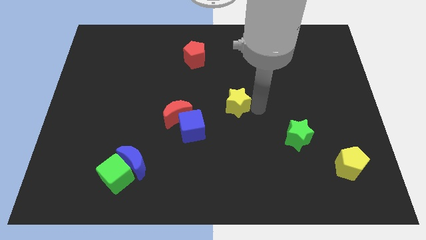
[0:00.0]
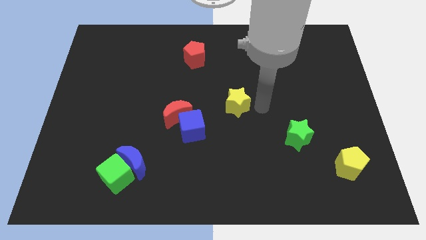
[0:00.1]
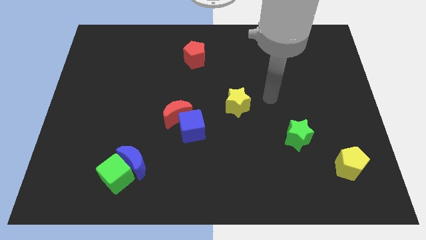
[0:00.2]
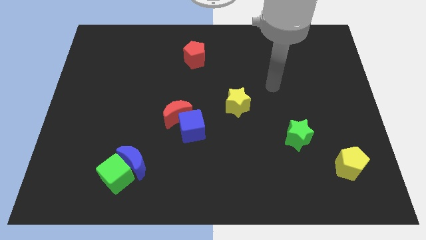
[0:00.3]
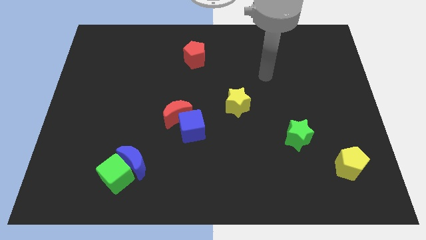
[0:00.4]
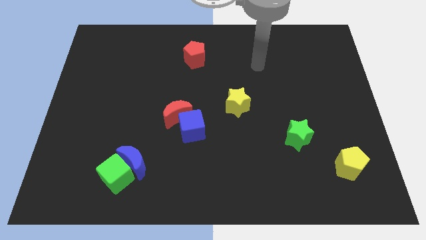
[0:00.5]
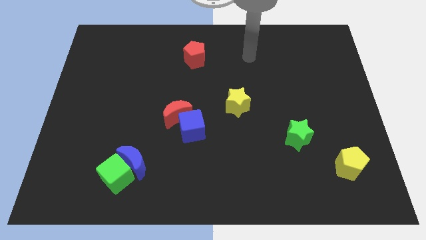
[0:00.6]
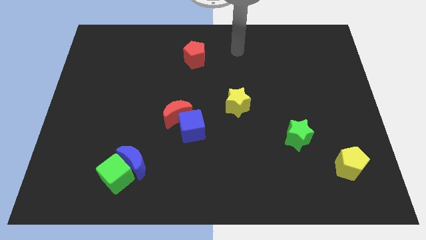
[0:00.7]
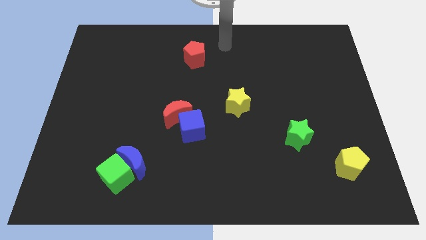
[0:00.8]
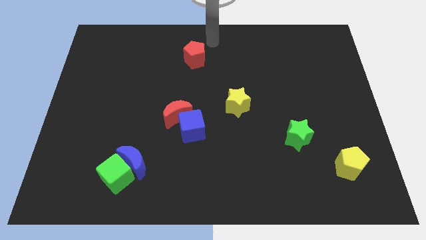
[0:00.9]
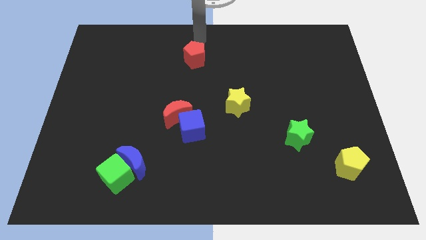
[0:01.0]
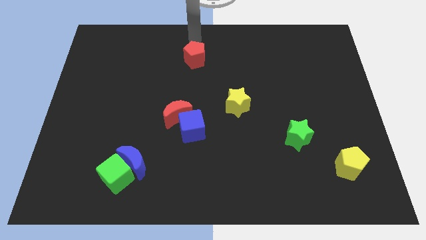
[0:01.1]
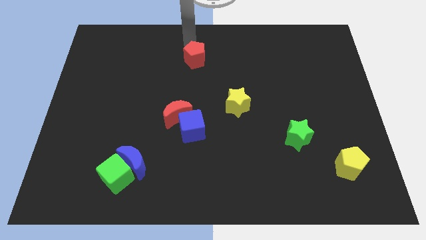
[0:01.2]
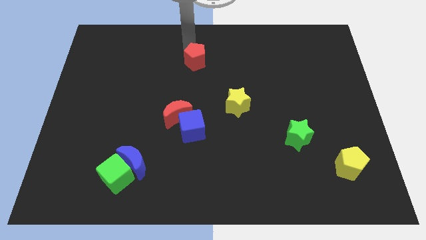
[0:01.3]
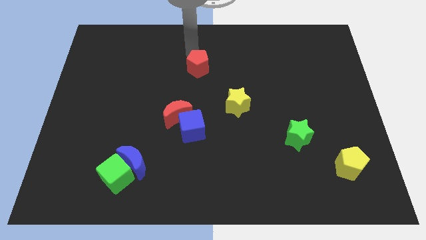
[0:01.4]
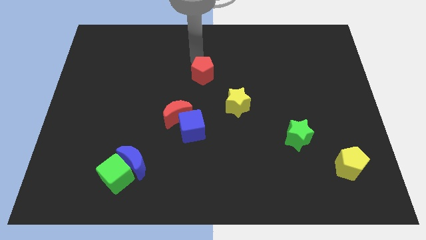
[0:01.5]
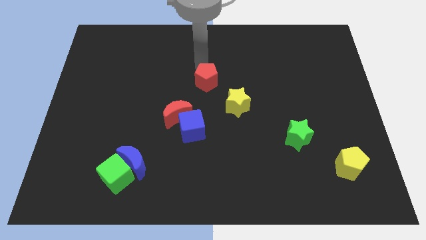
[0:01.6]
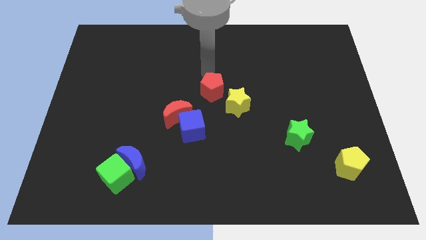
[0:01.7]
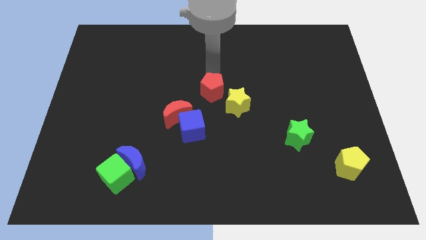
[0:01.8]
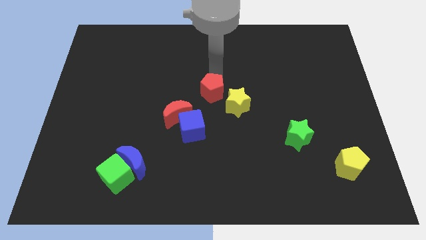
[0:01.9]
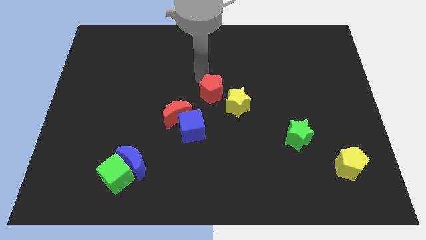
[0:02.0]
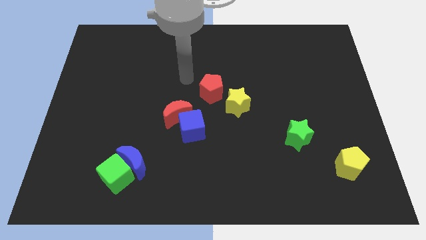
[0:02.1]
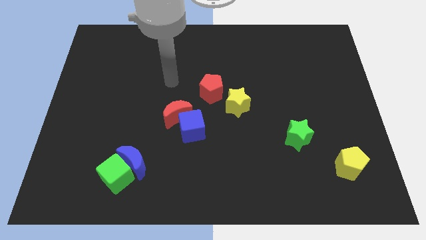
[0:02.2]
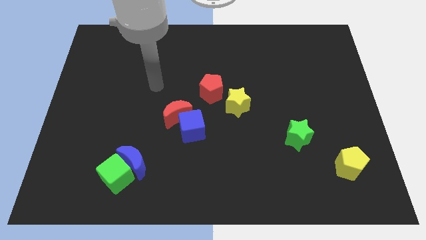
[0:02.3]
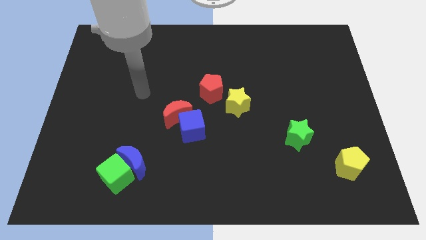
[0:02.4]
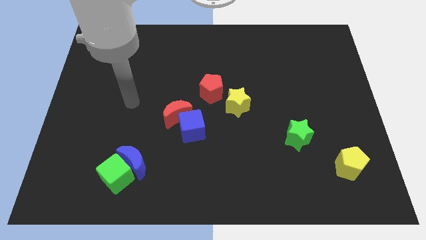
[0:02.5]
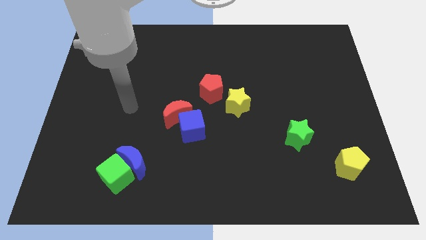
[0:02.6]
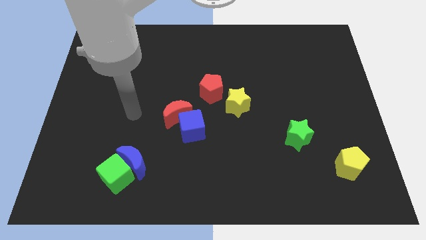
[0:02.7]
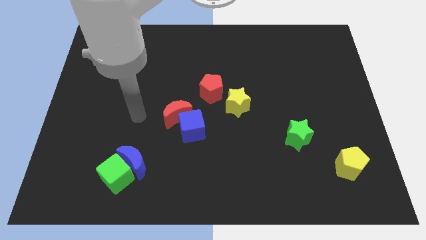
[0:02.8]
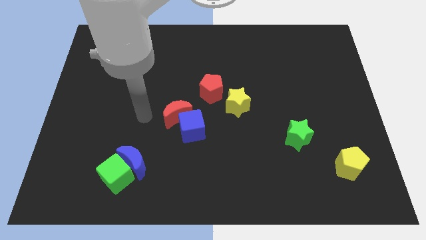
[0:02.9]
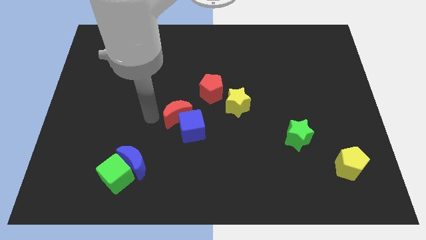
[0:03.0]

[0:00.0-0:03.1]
place the red pentagon at the top left side of the yelllow star

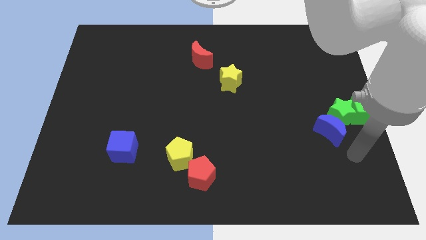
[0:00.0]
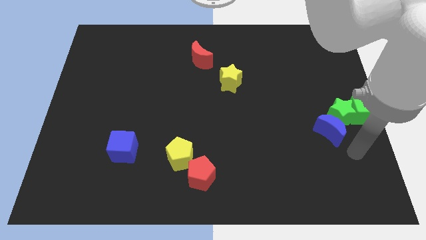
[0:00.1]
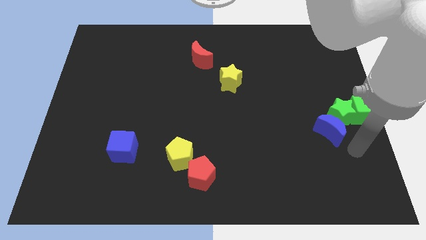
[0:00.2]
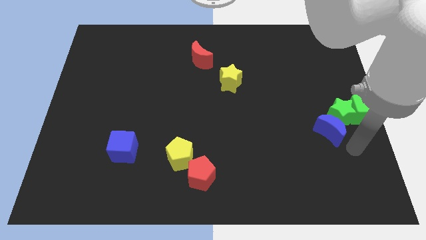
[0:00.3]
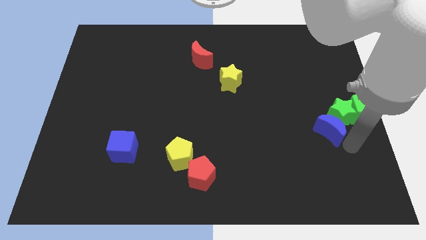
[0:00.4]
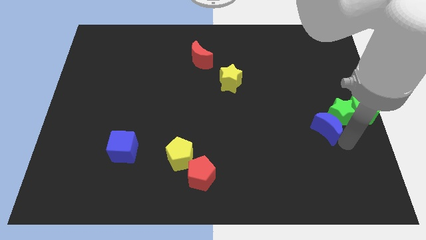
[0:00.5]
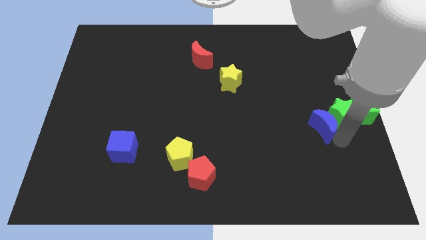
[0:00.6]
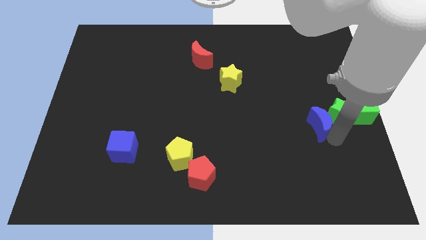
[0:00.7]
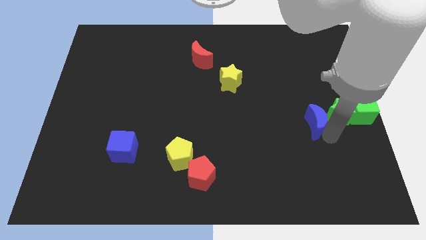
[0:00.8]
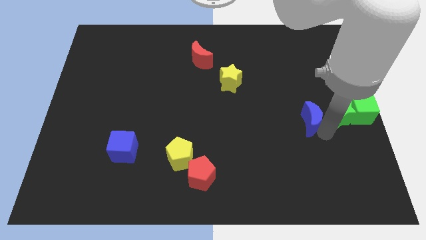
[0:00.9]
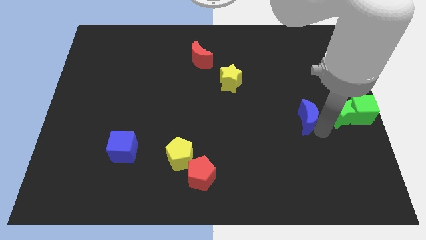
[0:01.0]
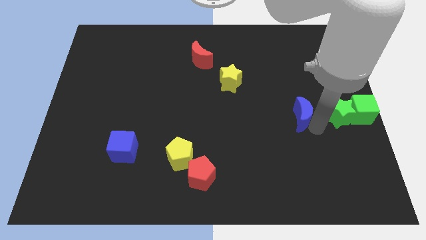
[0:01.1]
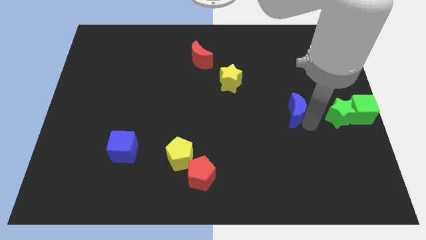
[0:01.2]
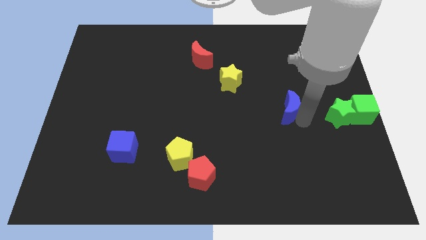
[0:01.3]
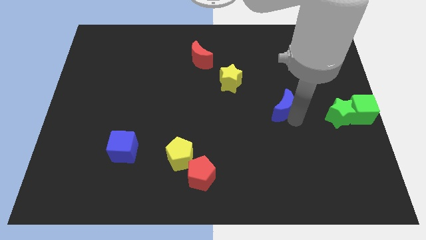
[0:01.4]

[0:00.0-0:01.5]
adjust the blue crescent in between the stars

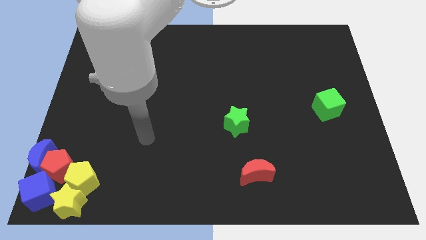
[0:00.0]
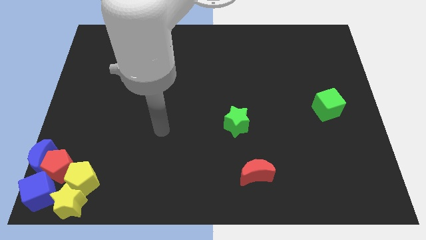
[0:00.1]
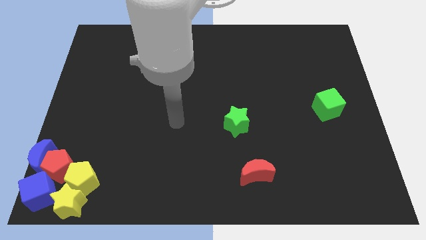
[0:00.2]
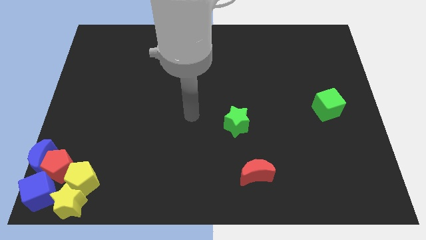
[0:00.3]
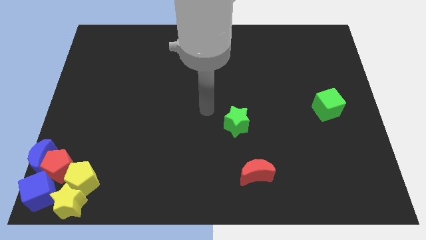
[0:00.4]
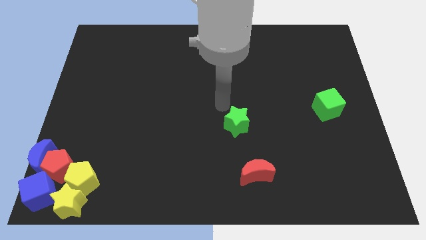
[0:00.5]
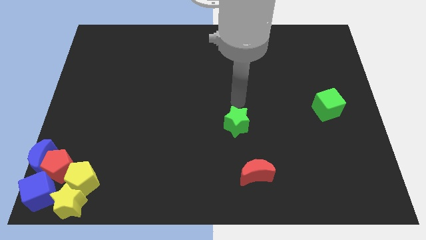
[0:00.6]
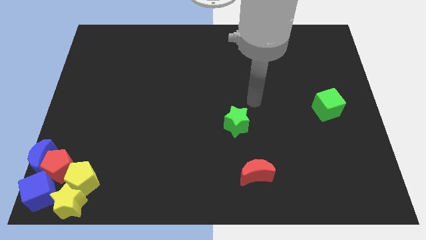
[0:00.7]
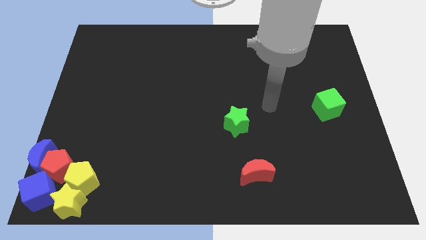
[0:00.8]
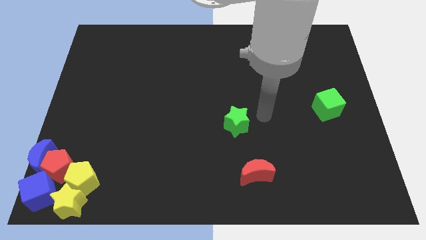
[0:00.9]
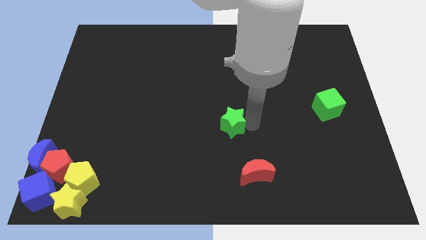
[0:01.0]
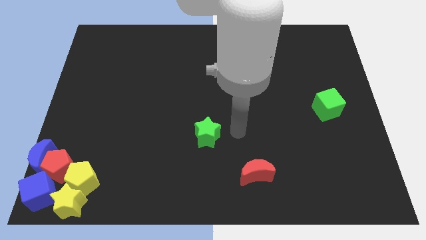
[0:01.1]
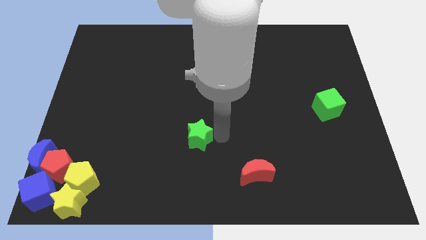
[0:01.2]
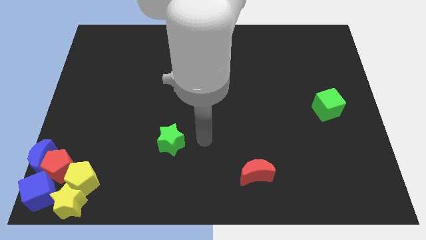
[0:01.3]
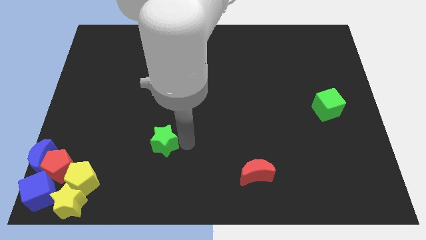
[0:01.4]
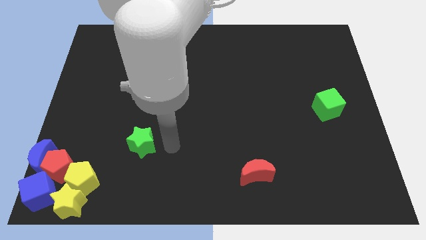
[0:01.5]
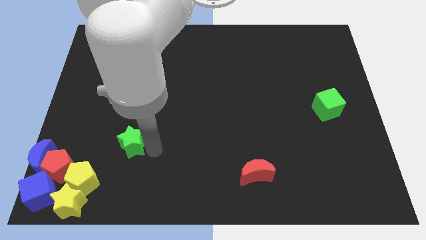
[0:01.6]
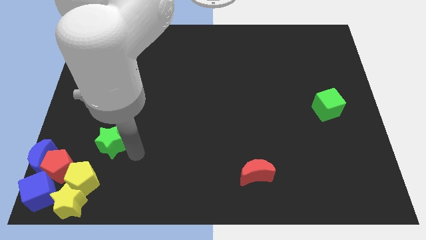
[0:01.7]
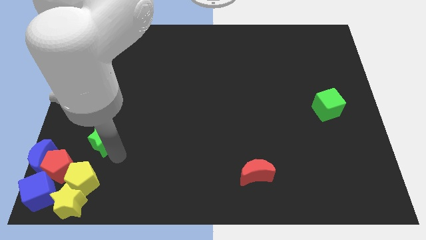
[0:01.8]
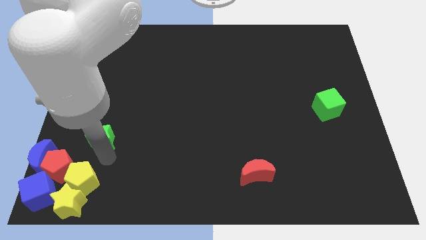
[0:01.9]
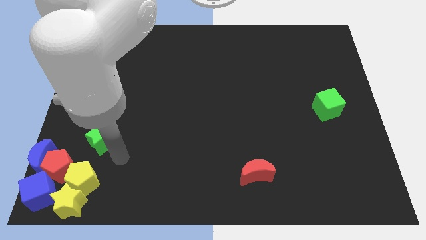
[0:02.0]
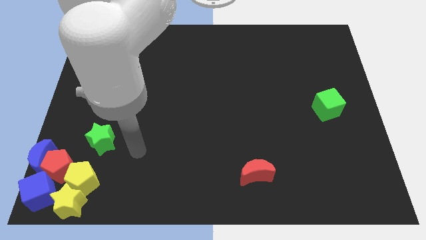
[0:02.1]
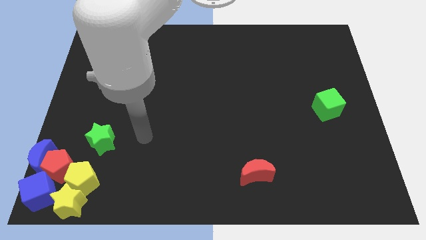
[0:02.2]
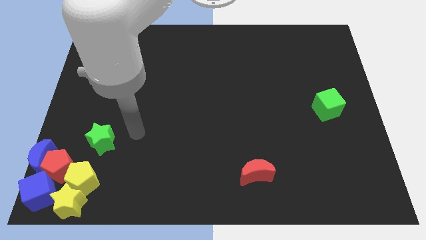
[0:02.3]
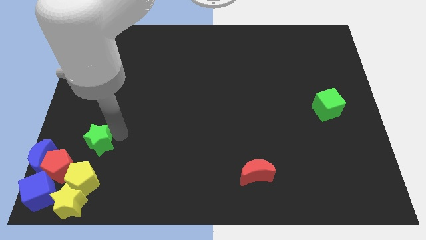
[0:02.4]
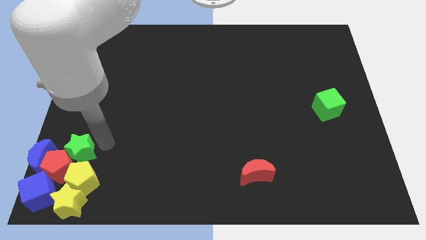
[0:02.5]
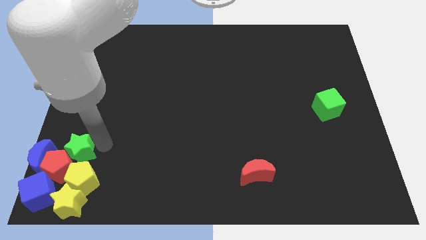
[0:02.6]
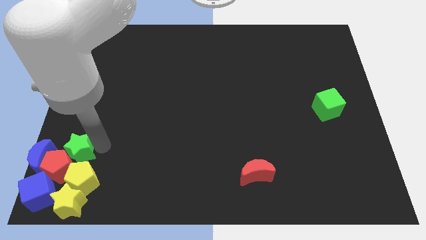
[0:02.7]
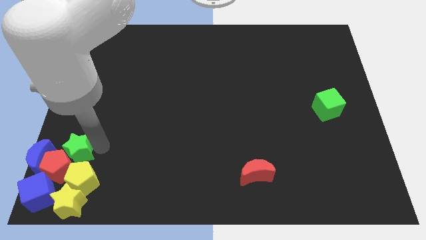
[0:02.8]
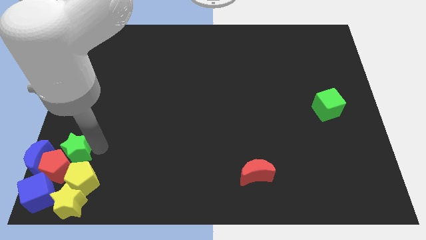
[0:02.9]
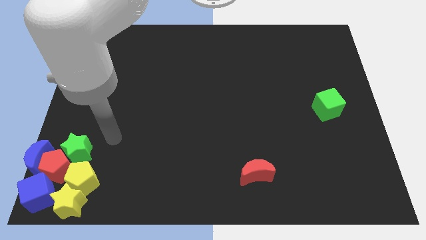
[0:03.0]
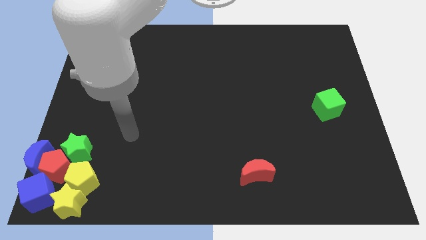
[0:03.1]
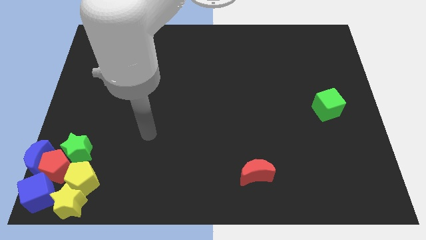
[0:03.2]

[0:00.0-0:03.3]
push the green star into the red pentagon

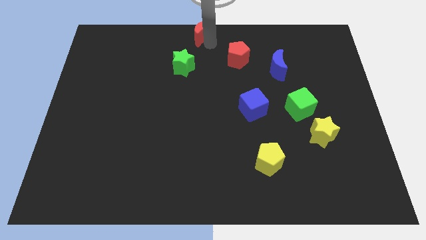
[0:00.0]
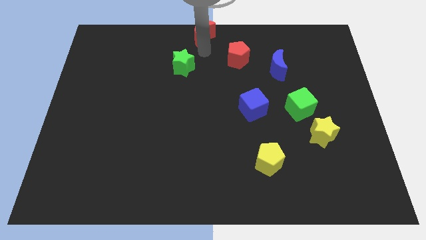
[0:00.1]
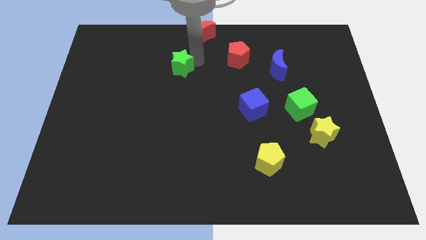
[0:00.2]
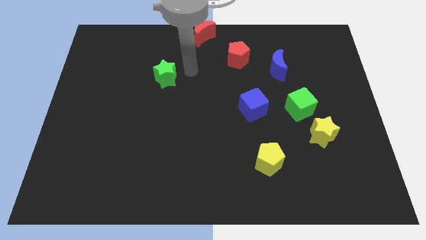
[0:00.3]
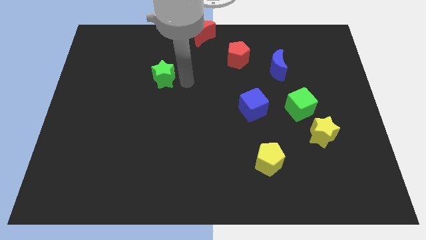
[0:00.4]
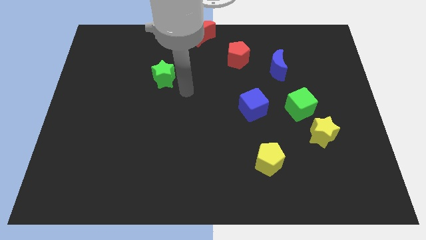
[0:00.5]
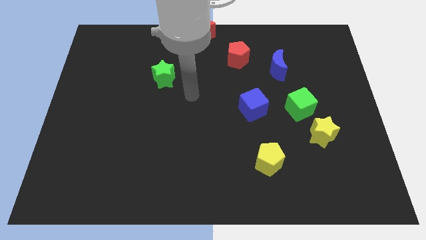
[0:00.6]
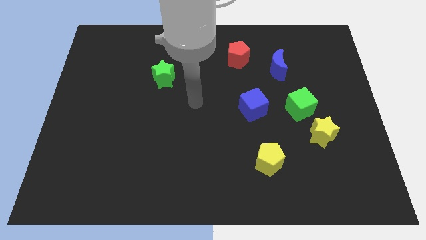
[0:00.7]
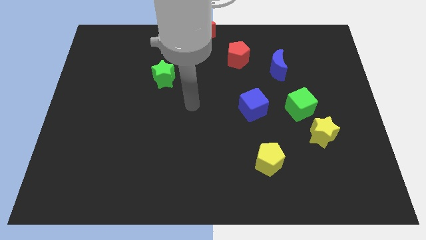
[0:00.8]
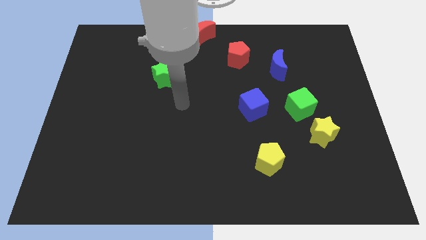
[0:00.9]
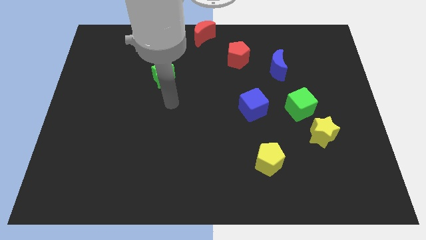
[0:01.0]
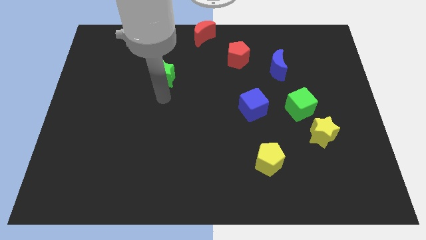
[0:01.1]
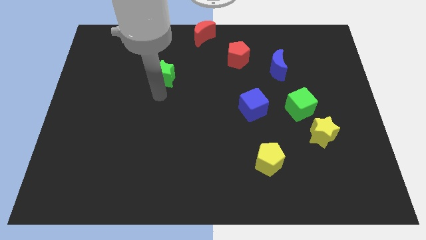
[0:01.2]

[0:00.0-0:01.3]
push green star to the center of the board
